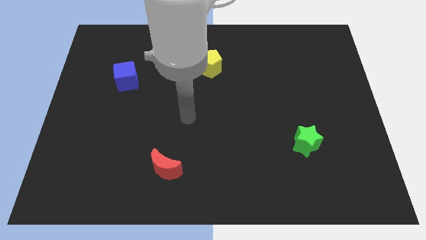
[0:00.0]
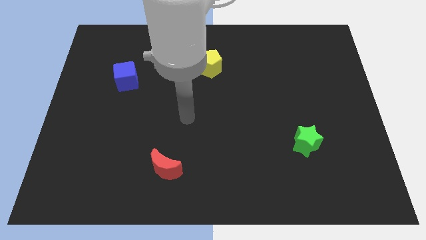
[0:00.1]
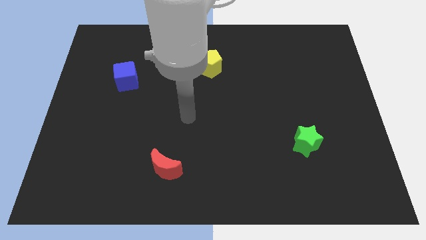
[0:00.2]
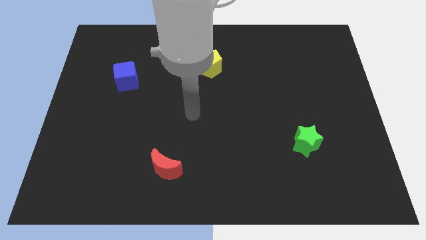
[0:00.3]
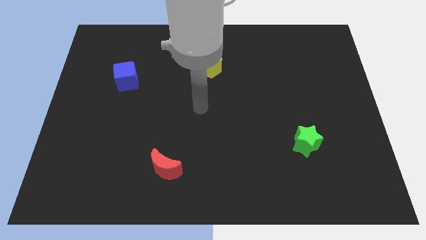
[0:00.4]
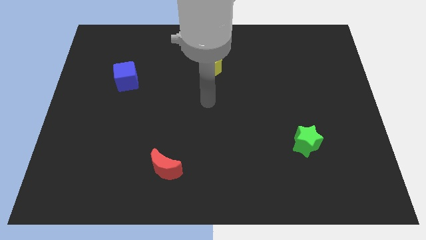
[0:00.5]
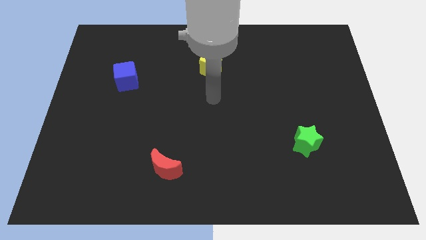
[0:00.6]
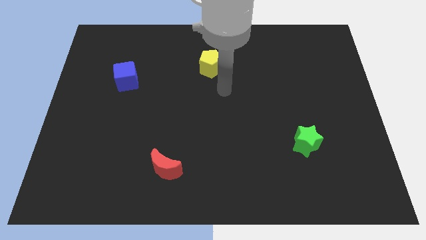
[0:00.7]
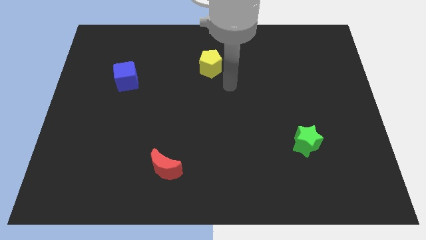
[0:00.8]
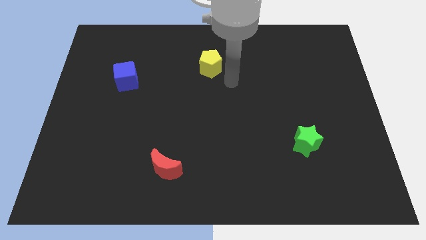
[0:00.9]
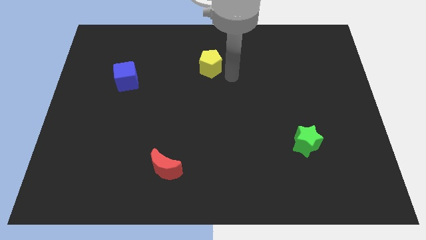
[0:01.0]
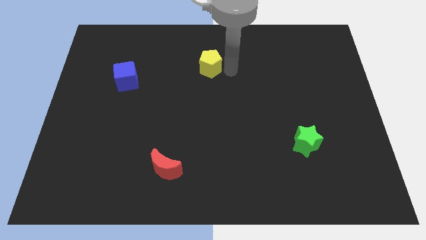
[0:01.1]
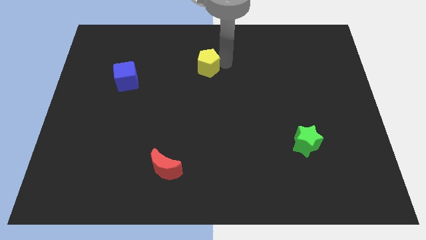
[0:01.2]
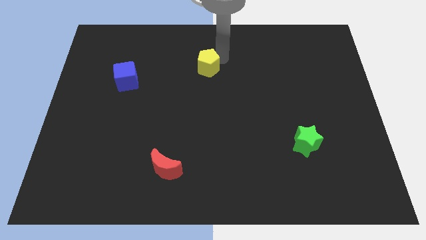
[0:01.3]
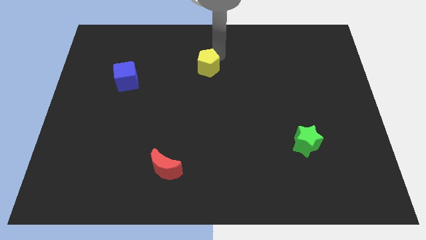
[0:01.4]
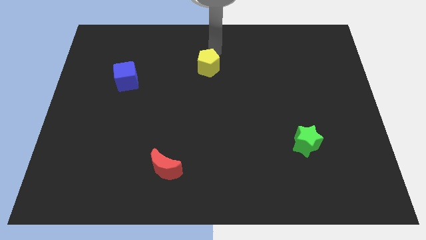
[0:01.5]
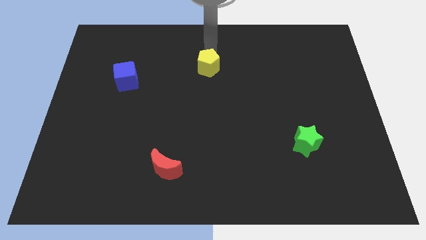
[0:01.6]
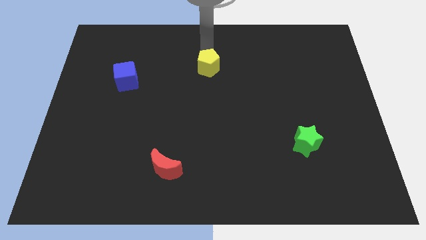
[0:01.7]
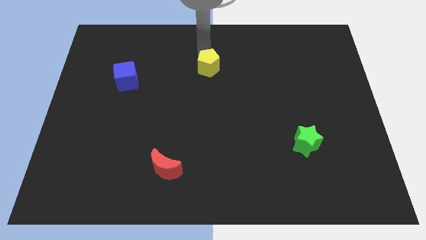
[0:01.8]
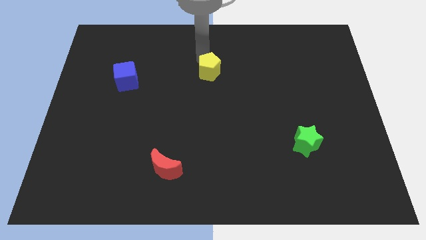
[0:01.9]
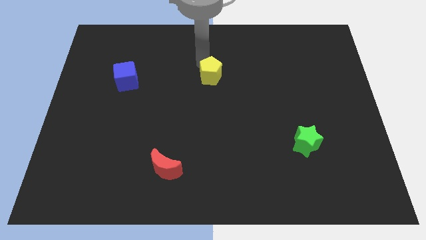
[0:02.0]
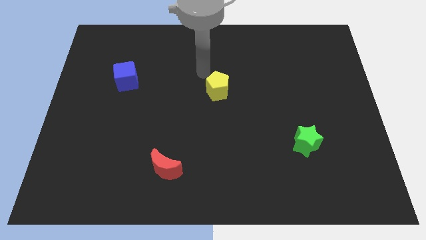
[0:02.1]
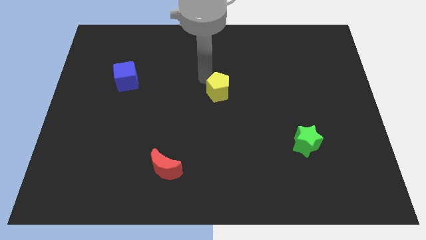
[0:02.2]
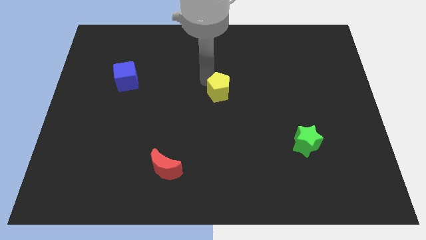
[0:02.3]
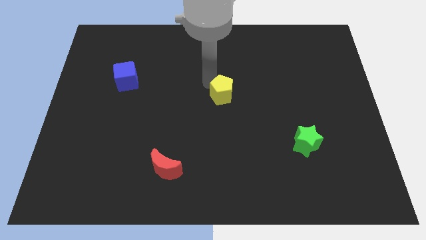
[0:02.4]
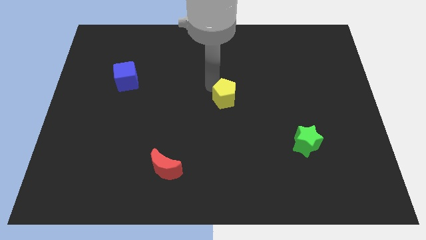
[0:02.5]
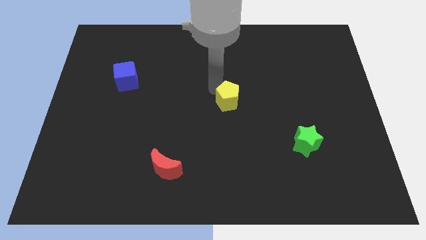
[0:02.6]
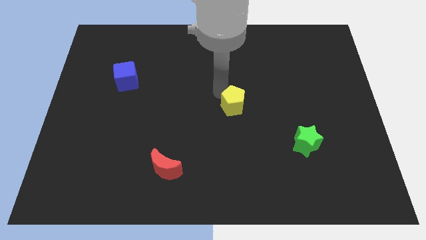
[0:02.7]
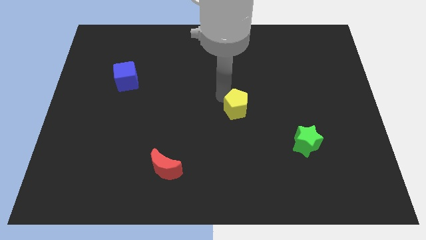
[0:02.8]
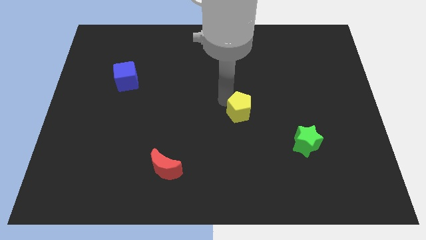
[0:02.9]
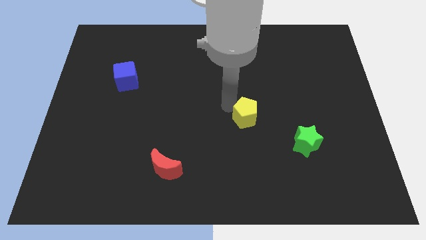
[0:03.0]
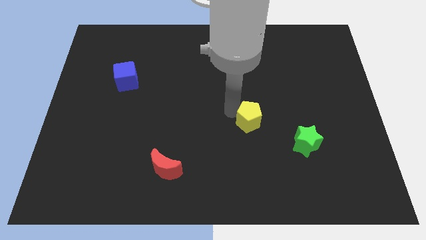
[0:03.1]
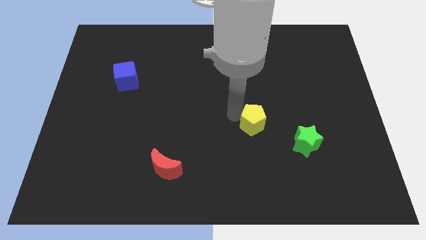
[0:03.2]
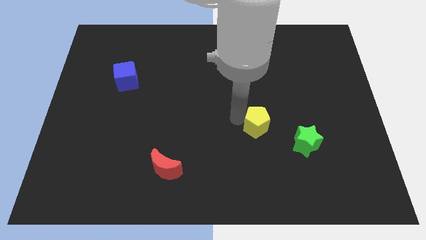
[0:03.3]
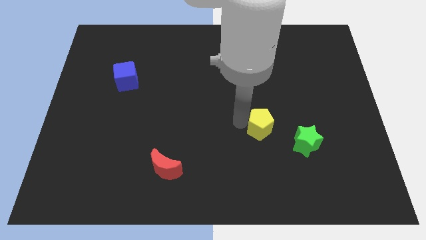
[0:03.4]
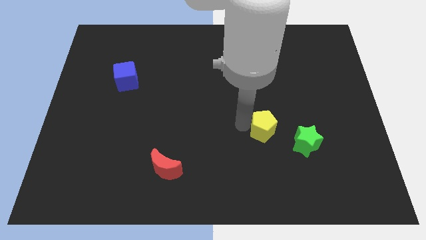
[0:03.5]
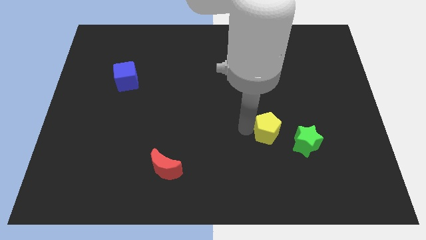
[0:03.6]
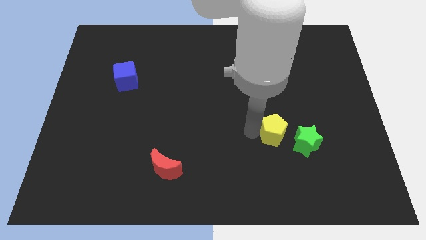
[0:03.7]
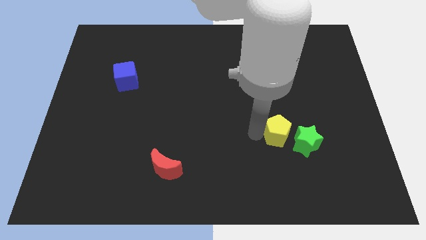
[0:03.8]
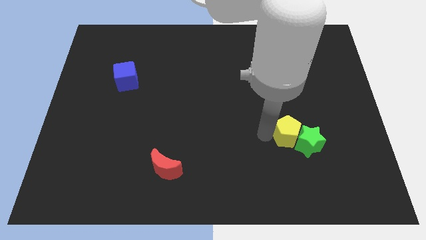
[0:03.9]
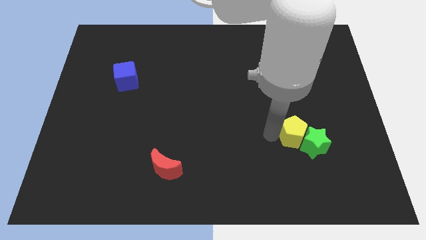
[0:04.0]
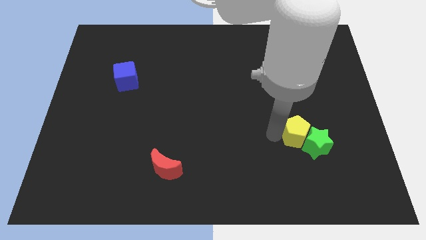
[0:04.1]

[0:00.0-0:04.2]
put the yellow block close to the green block

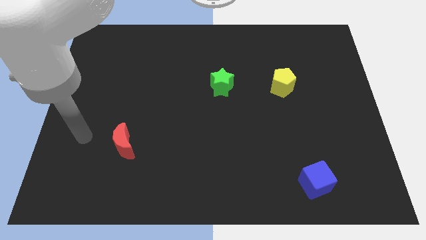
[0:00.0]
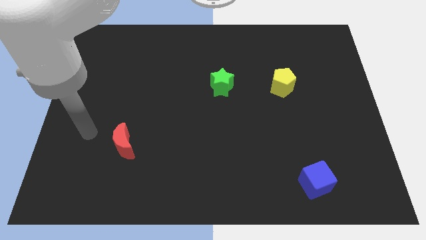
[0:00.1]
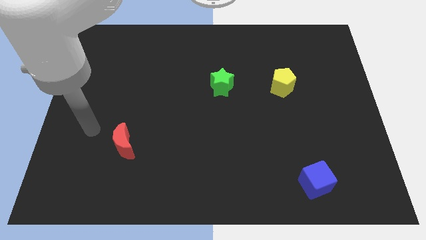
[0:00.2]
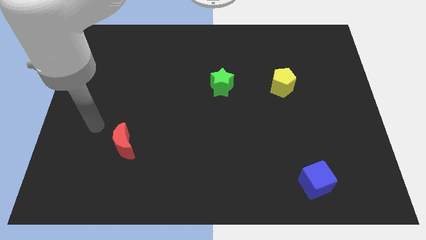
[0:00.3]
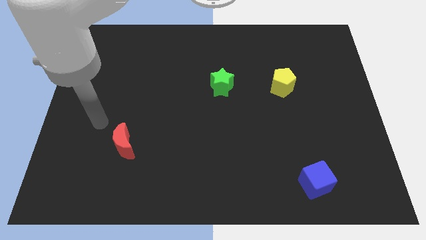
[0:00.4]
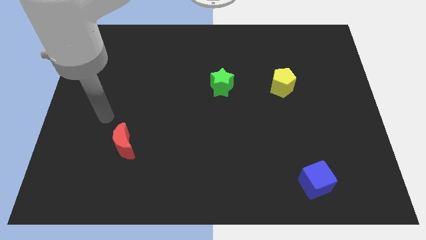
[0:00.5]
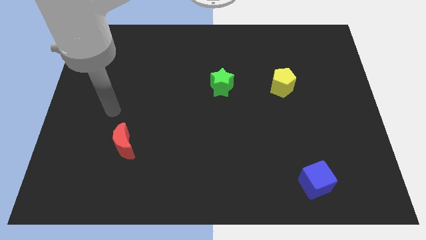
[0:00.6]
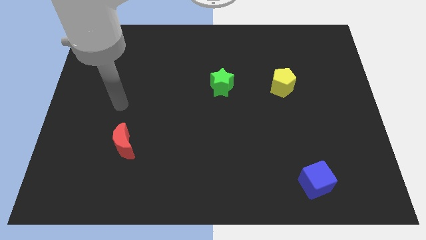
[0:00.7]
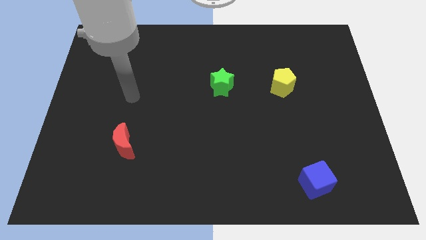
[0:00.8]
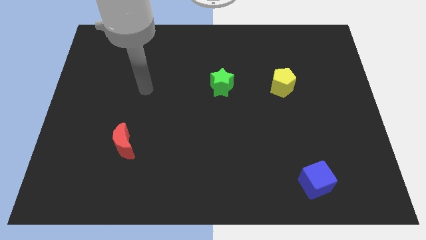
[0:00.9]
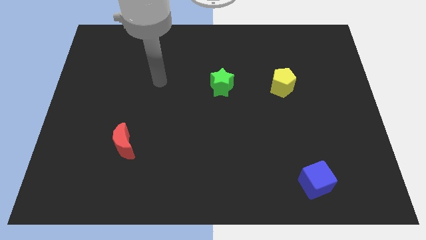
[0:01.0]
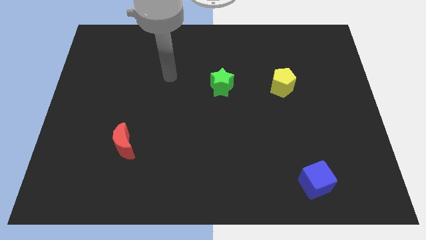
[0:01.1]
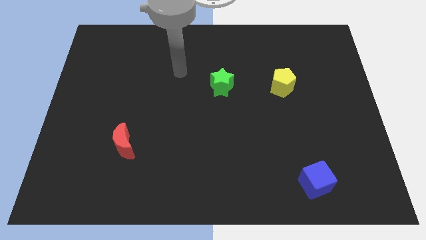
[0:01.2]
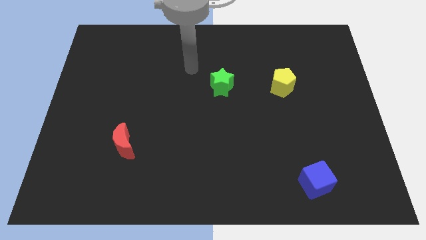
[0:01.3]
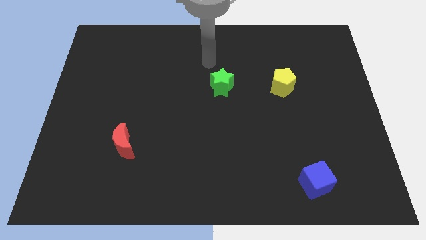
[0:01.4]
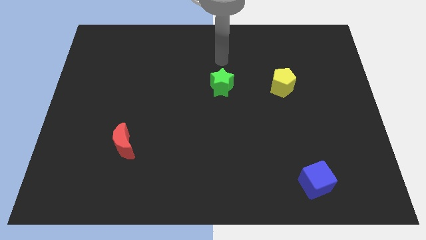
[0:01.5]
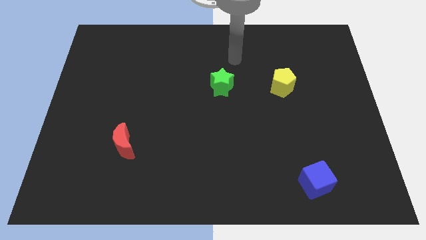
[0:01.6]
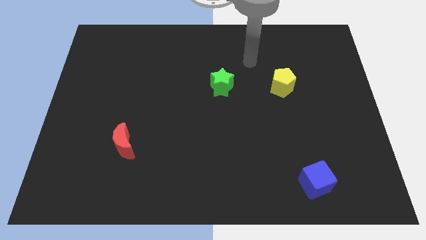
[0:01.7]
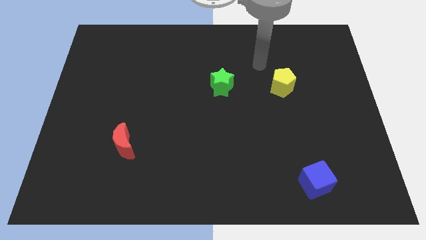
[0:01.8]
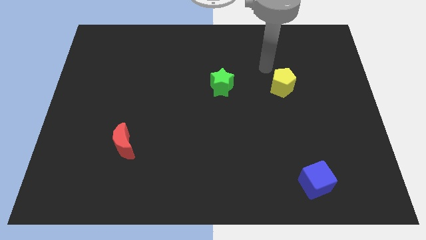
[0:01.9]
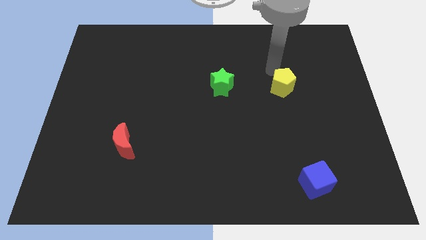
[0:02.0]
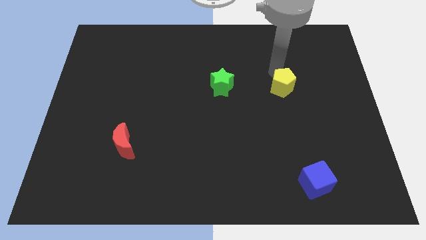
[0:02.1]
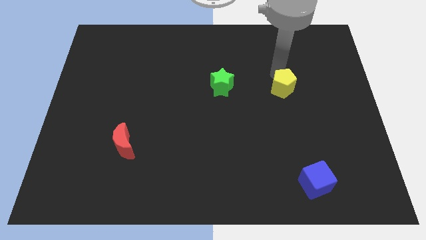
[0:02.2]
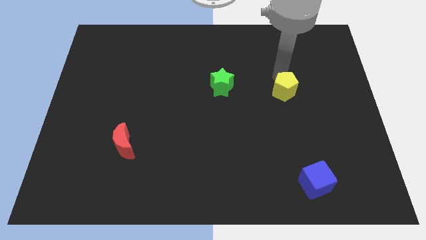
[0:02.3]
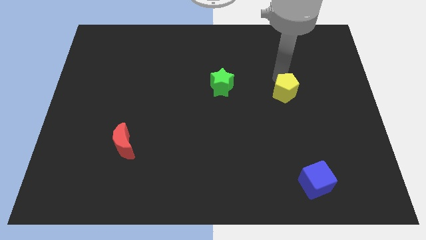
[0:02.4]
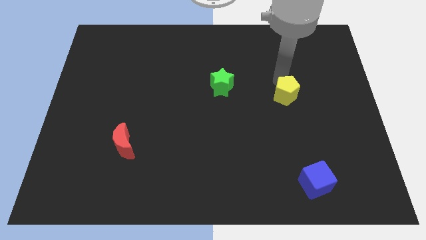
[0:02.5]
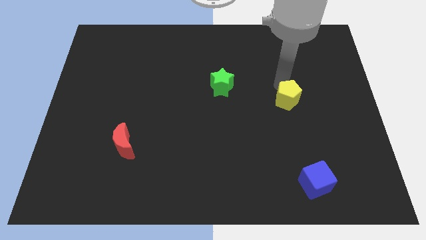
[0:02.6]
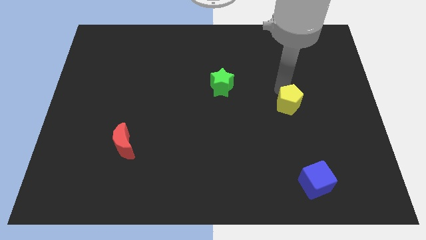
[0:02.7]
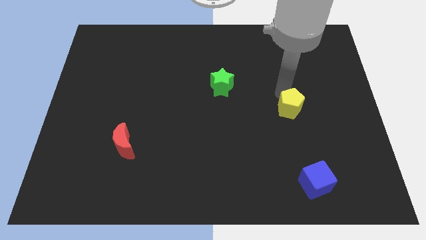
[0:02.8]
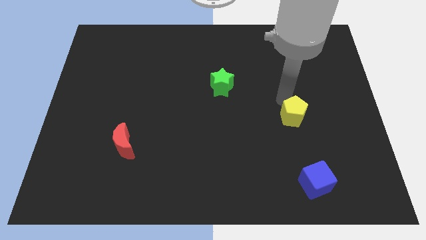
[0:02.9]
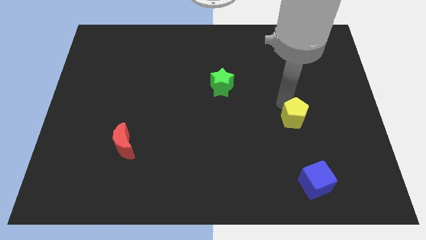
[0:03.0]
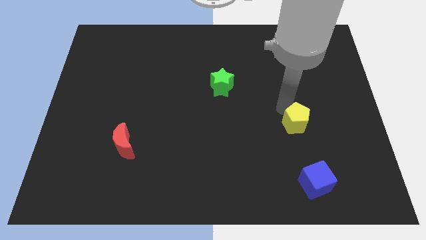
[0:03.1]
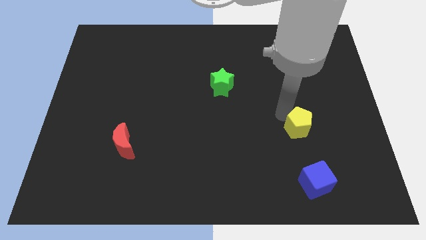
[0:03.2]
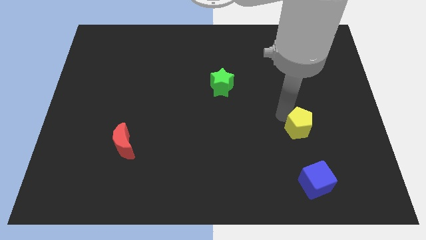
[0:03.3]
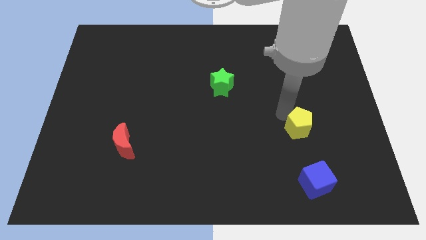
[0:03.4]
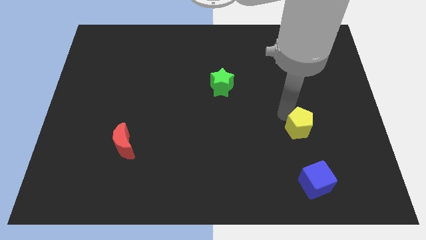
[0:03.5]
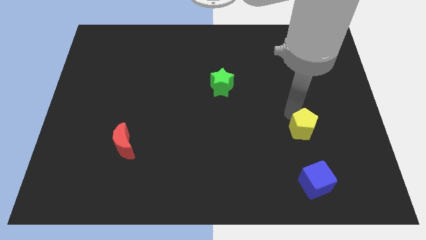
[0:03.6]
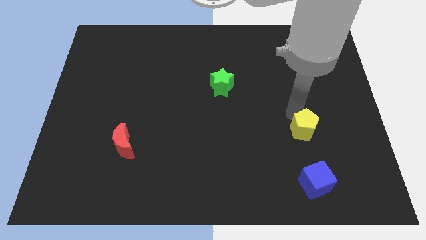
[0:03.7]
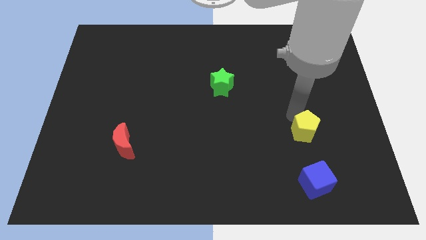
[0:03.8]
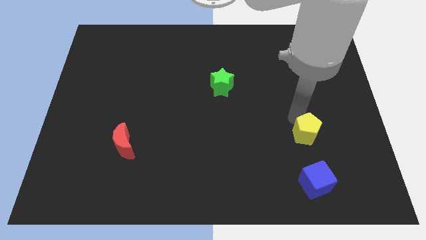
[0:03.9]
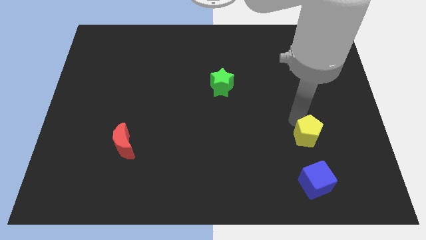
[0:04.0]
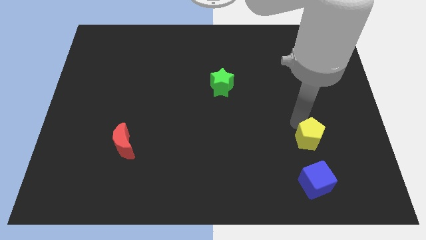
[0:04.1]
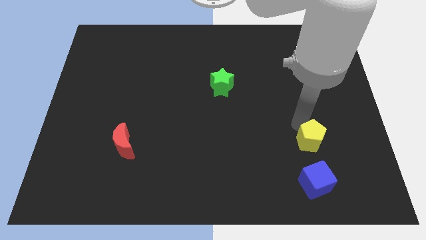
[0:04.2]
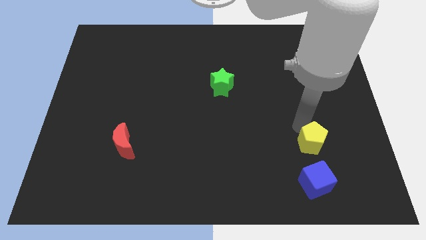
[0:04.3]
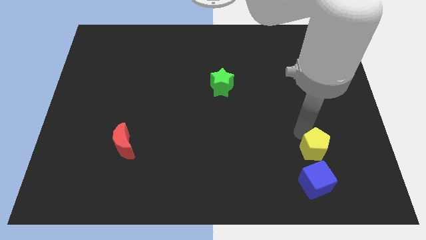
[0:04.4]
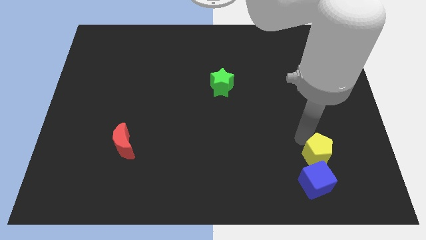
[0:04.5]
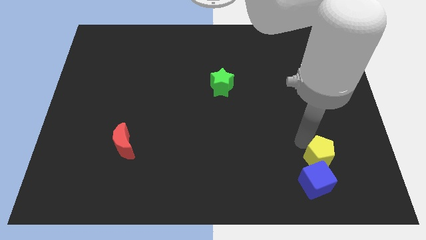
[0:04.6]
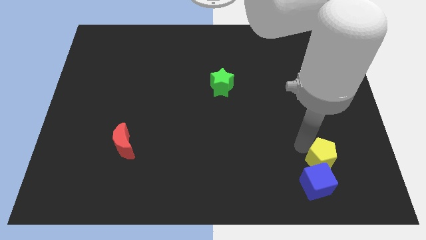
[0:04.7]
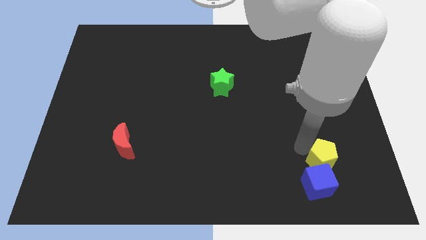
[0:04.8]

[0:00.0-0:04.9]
push the pentagon towards the cube
